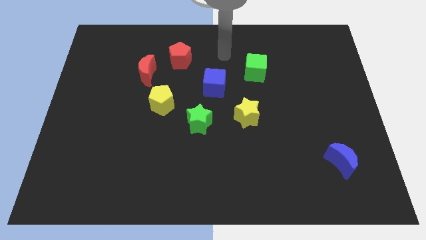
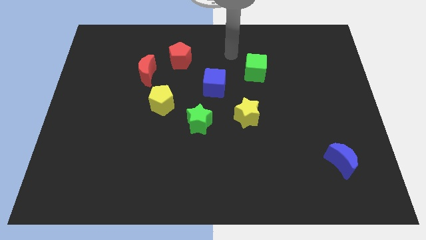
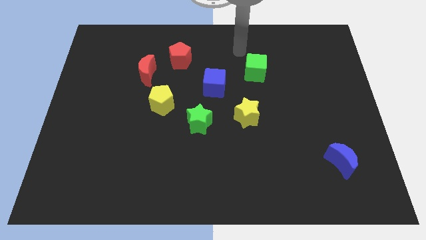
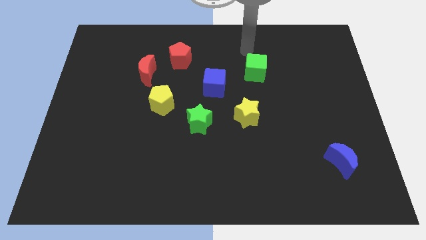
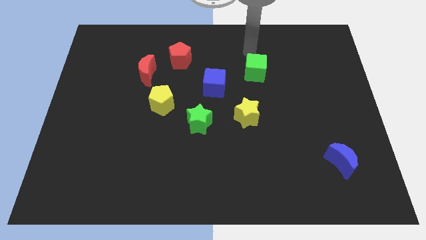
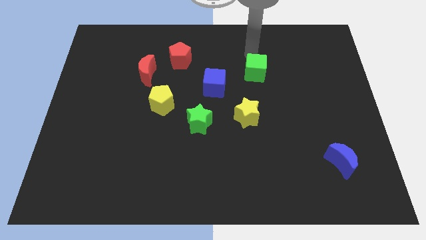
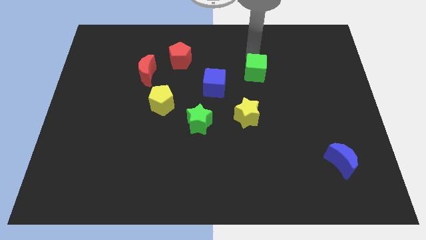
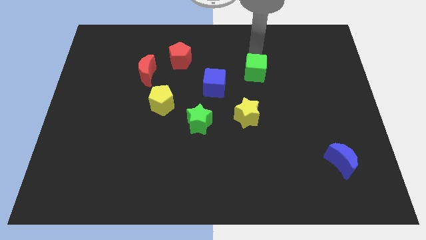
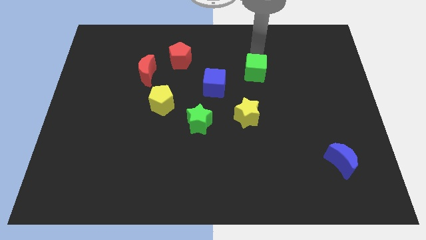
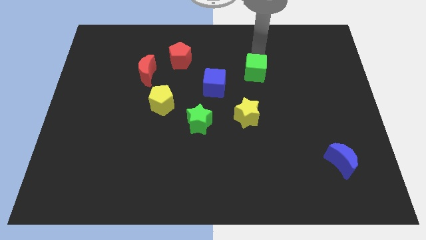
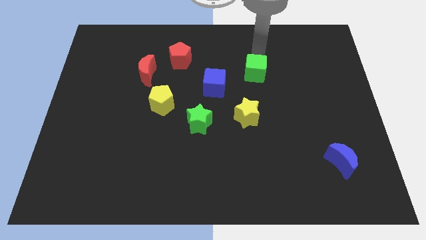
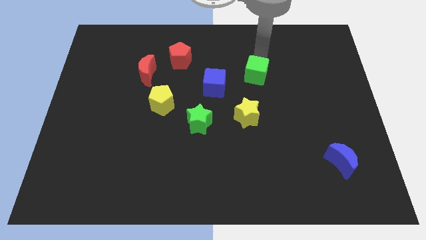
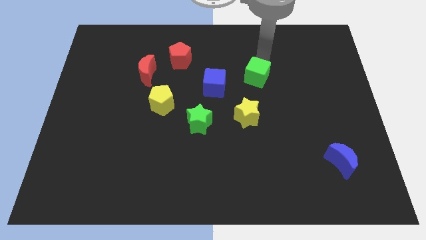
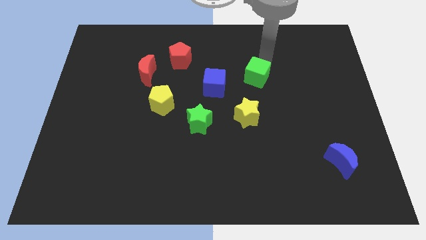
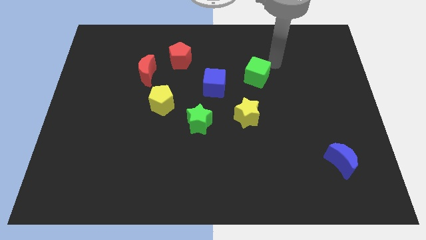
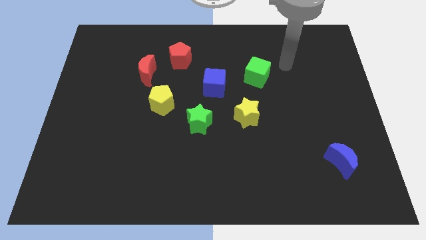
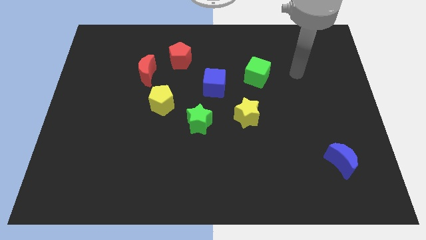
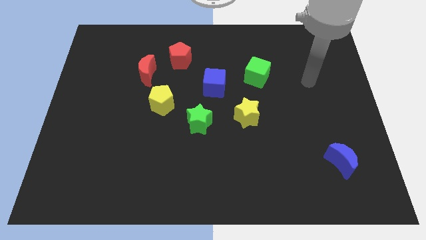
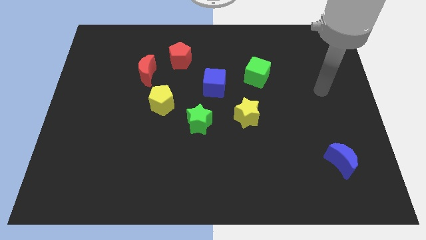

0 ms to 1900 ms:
slightly touch the green cube and move away

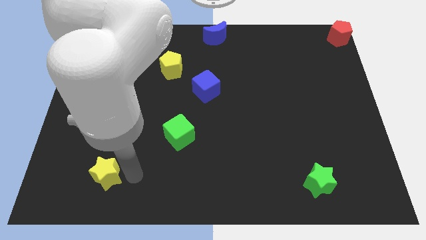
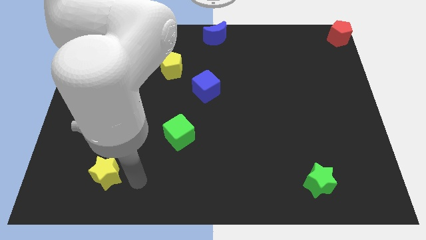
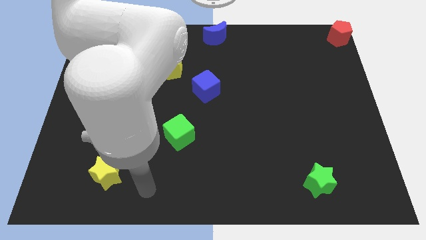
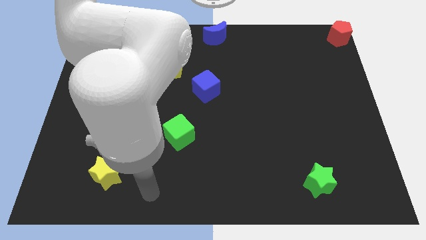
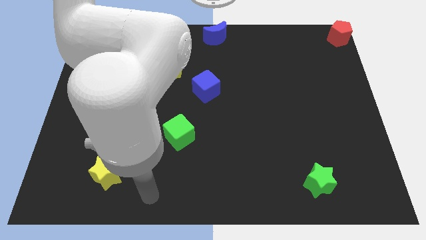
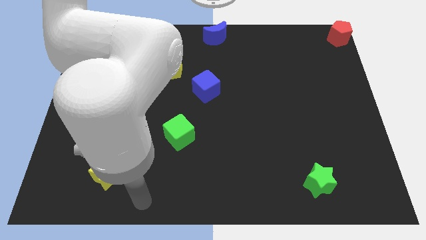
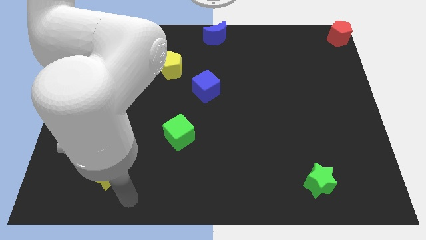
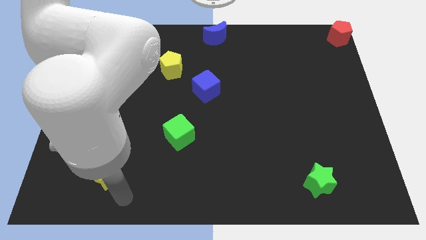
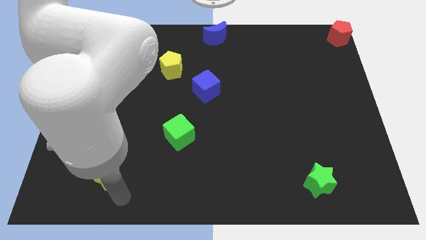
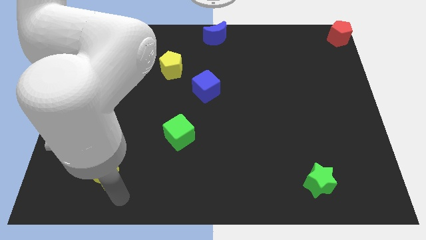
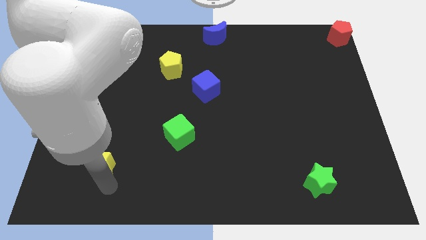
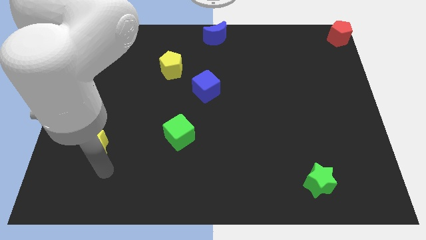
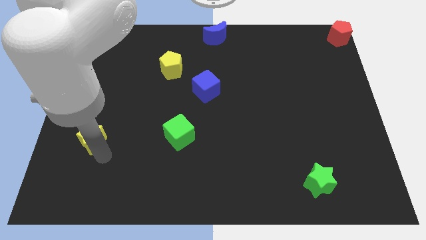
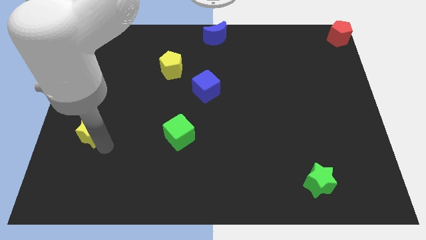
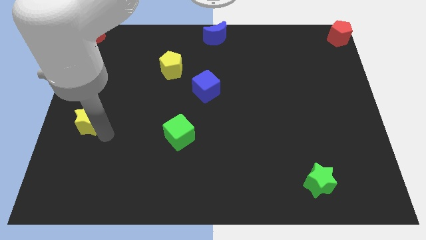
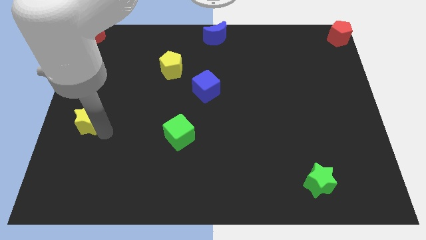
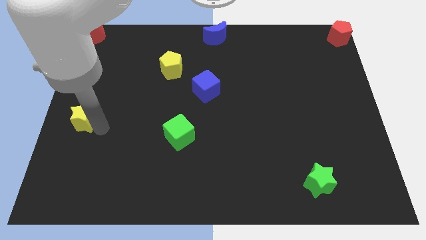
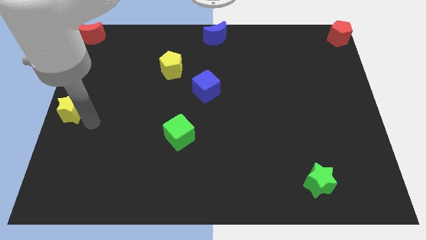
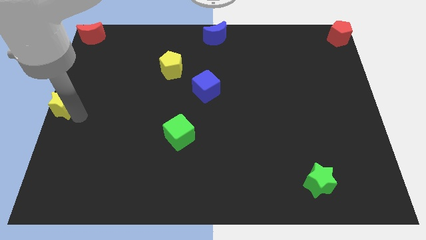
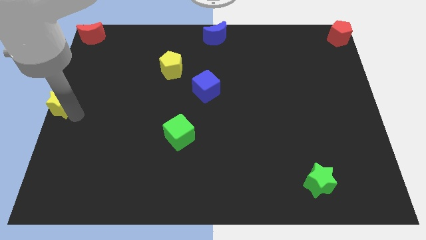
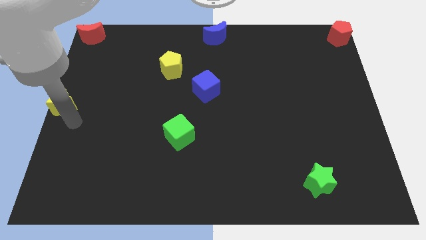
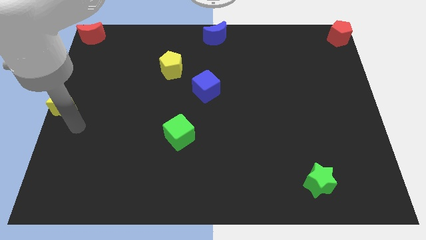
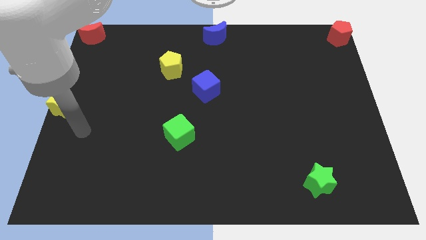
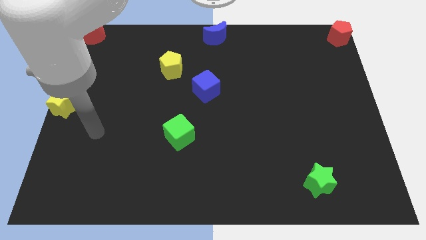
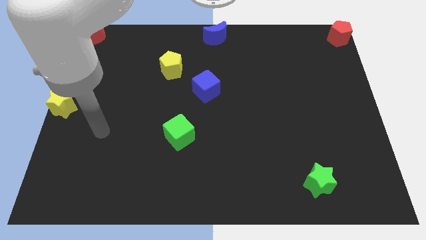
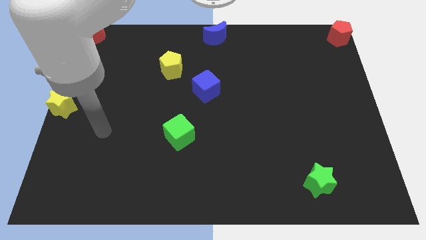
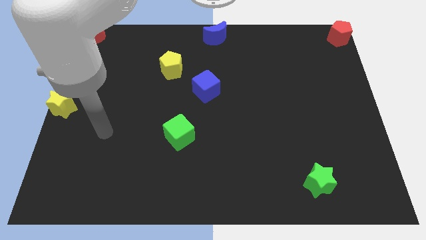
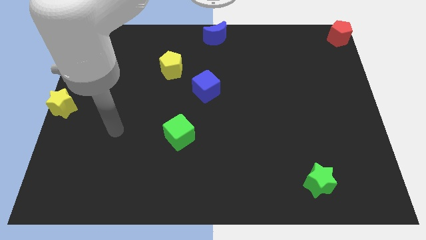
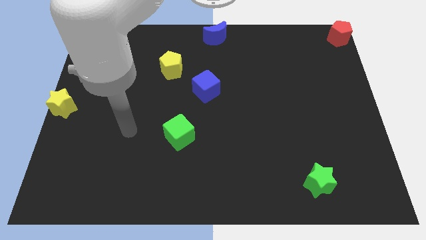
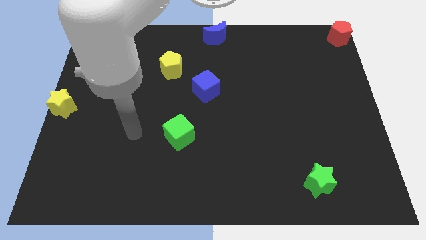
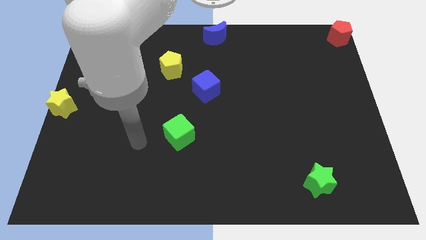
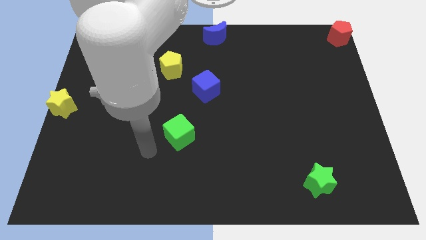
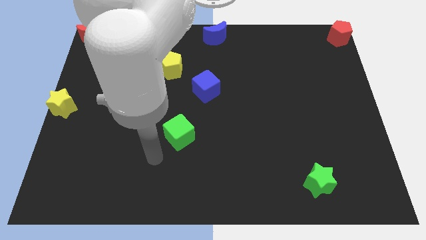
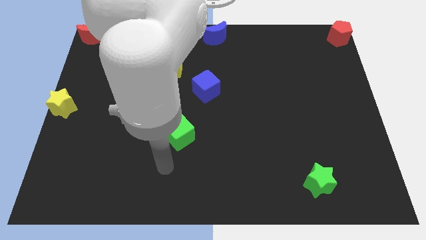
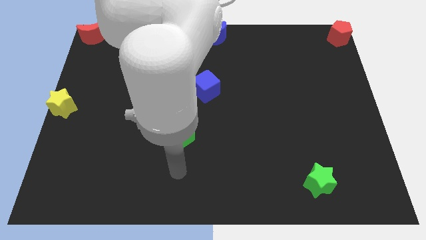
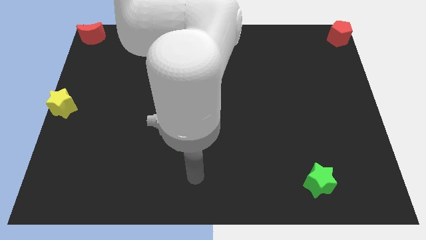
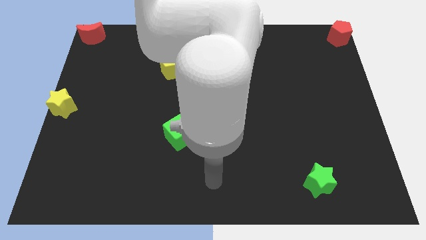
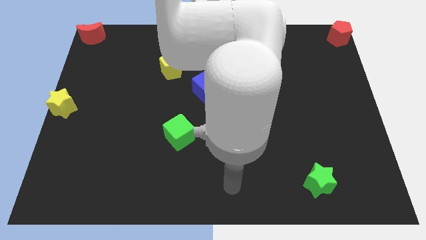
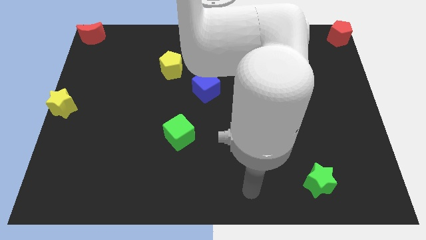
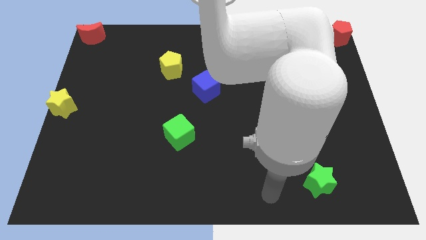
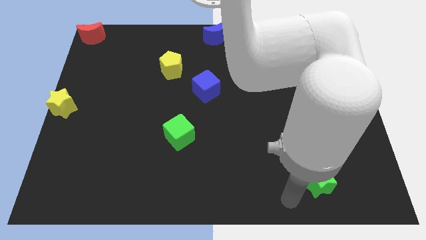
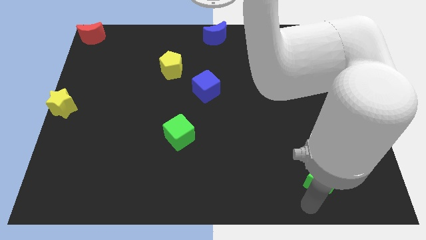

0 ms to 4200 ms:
put the yellow star at the center left side of the board

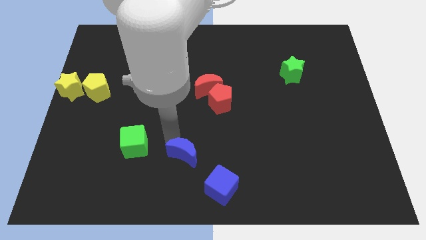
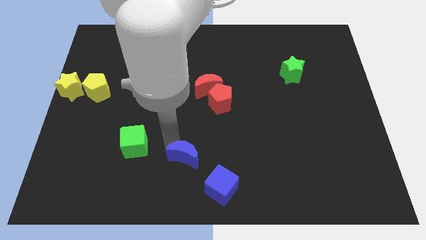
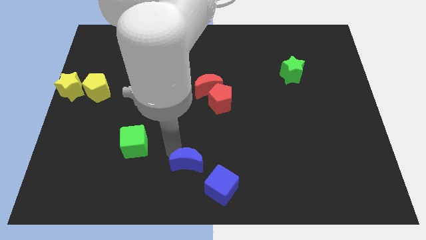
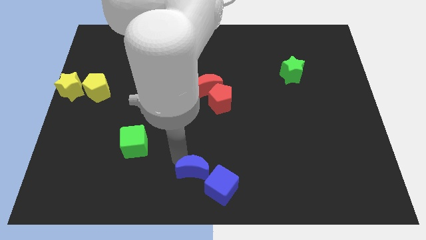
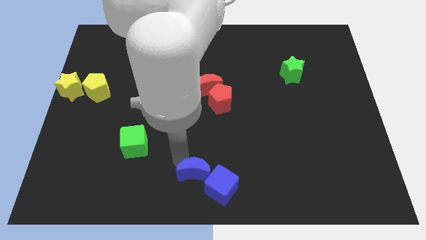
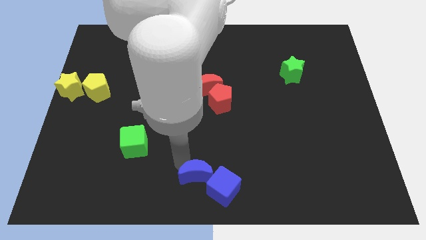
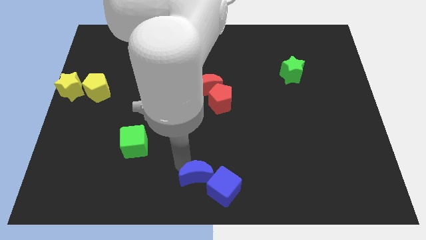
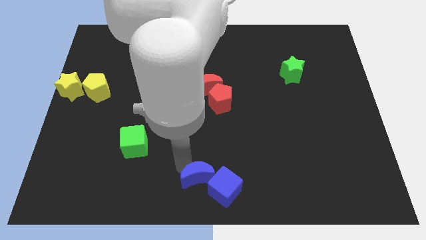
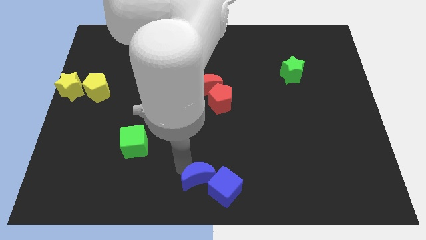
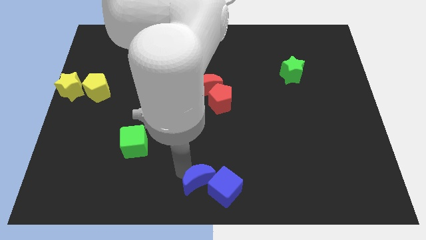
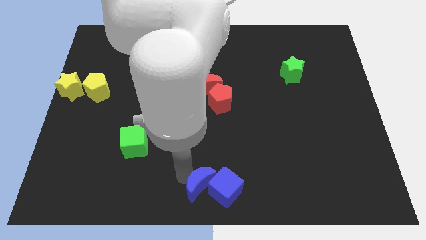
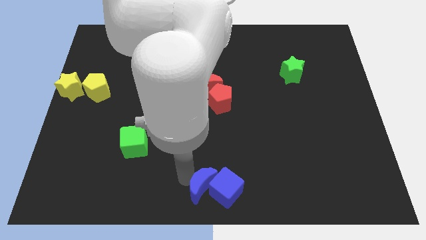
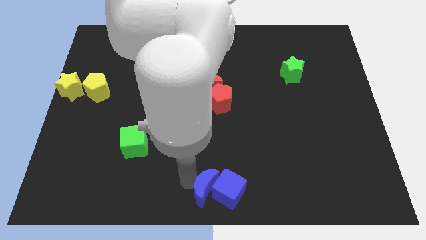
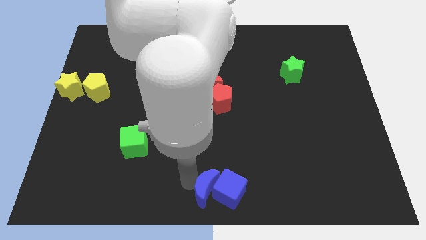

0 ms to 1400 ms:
push the blue crescent left to the blue cube

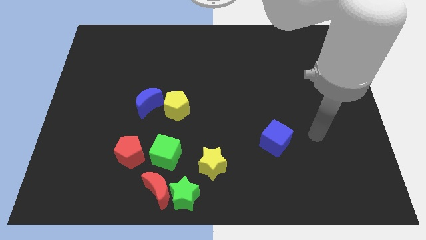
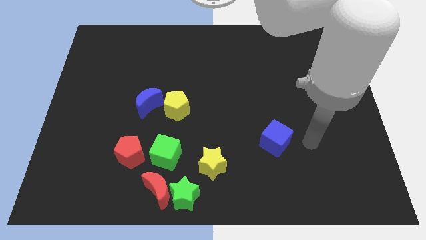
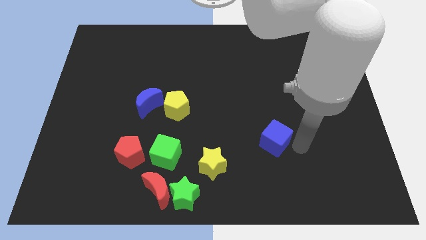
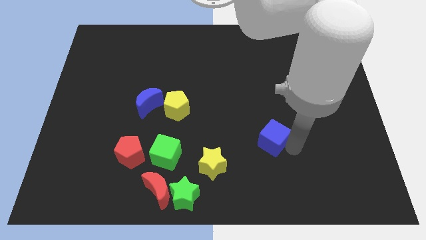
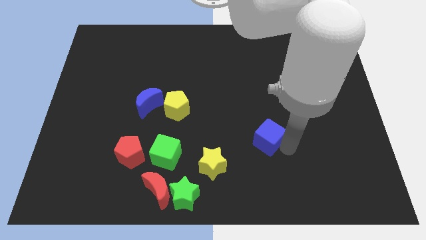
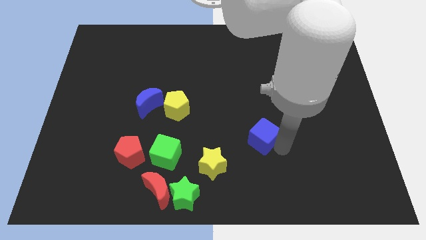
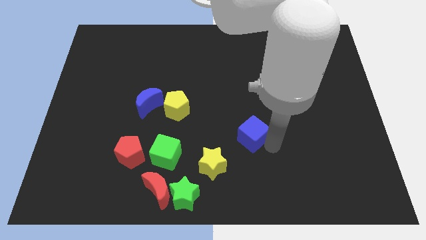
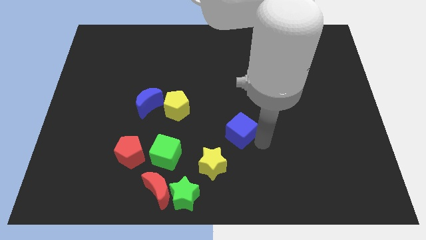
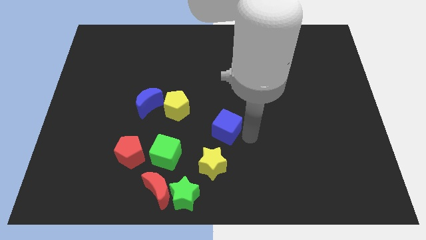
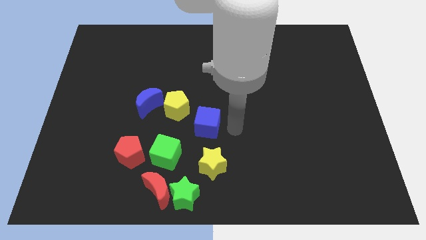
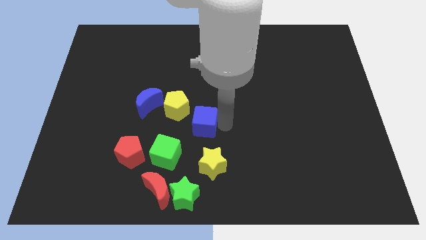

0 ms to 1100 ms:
place blue cube diagonal to the green cube

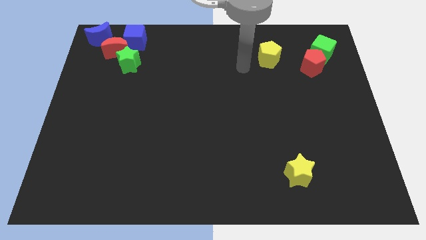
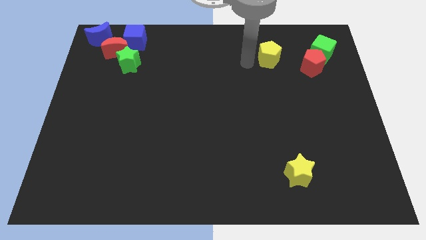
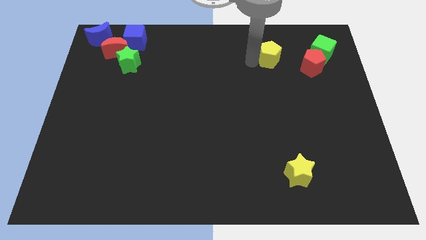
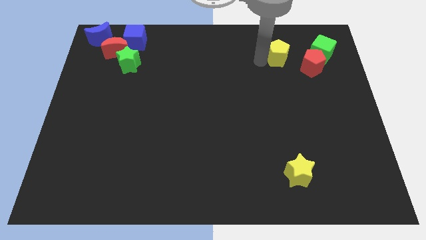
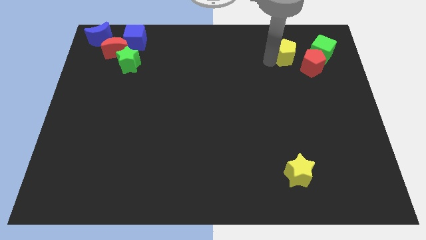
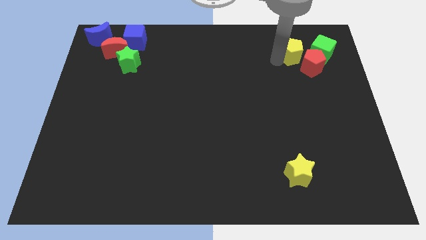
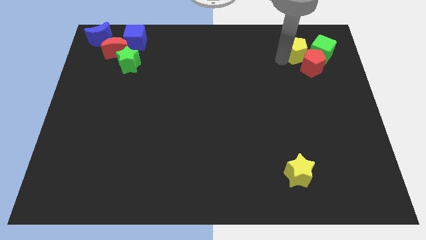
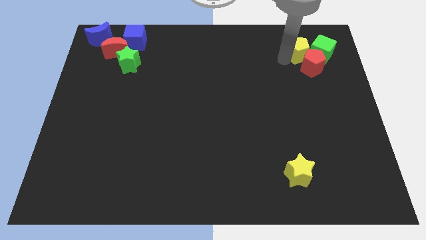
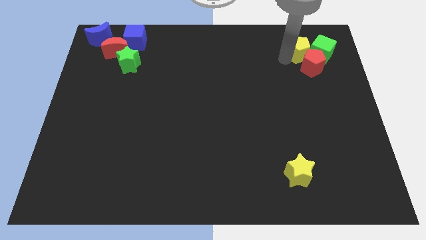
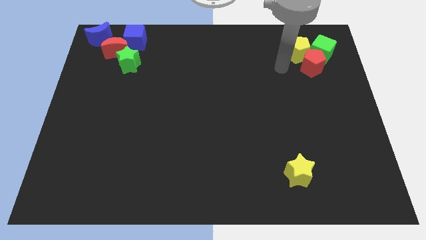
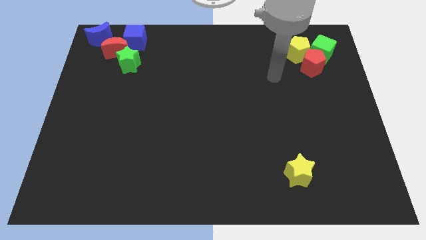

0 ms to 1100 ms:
place yellow pentagon above red pentagon
